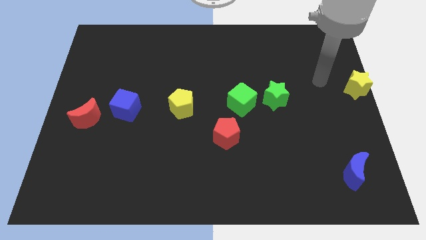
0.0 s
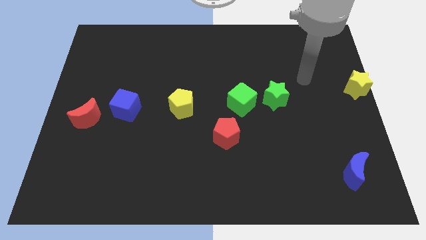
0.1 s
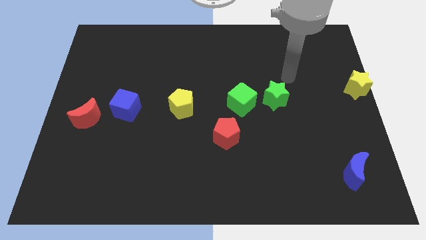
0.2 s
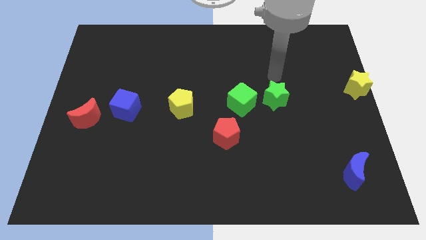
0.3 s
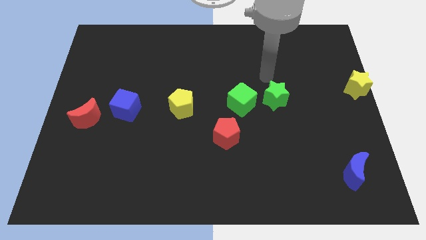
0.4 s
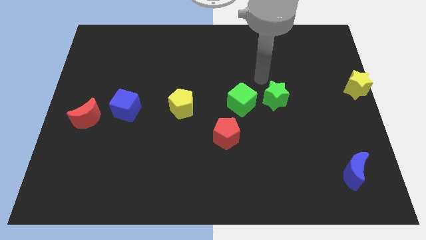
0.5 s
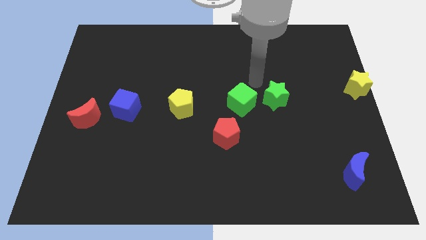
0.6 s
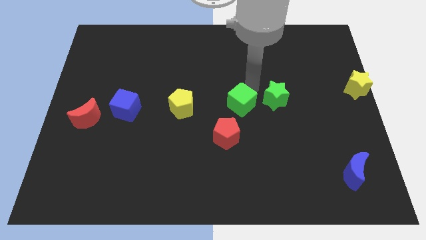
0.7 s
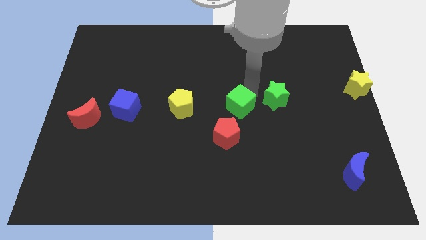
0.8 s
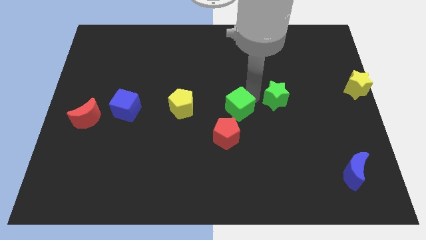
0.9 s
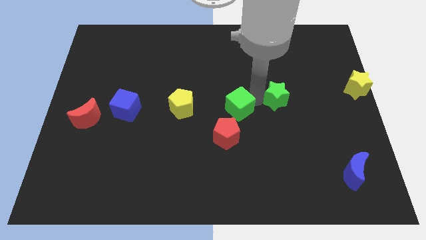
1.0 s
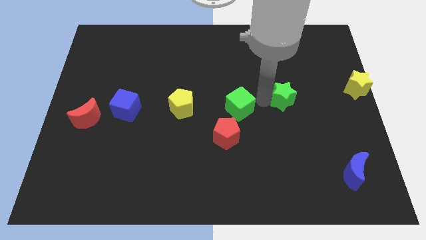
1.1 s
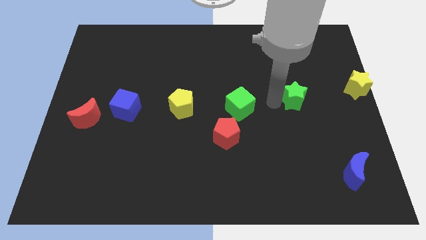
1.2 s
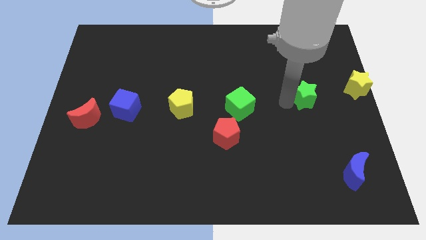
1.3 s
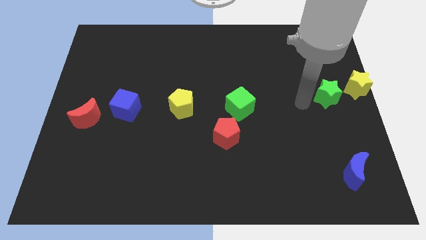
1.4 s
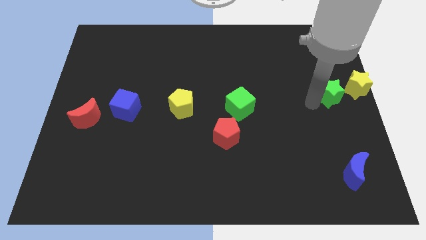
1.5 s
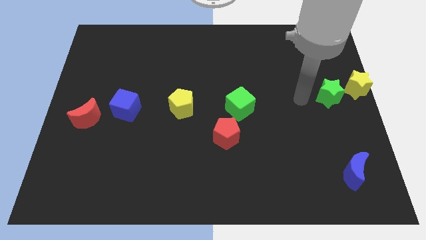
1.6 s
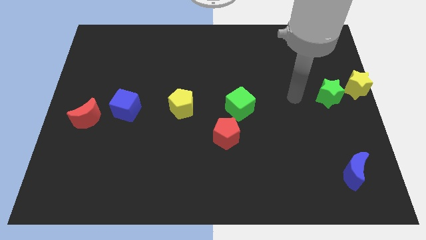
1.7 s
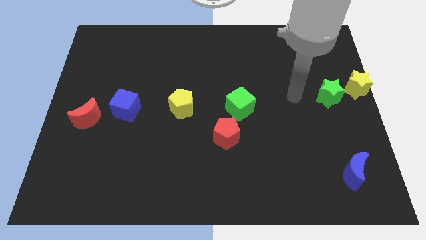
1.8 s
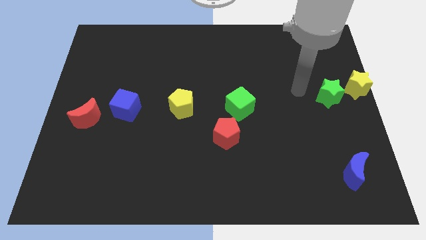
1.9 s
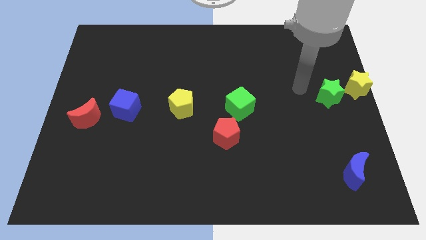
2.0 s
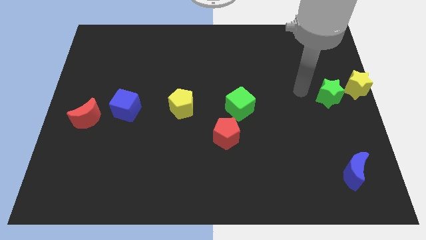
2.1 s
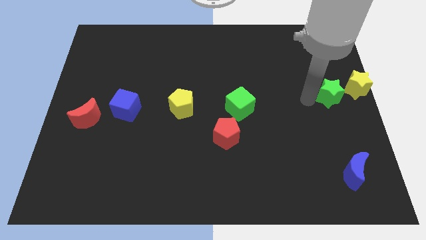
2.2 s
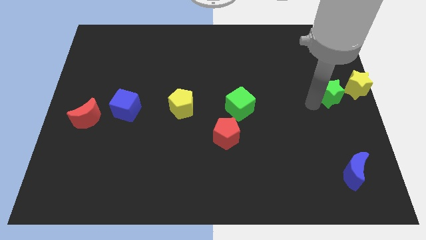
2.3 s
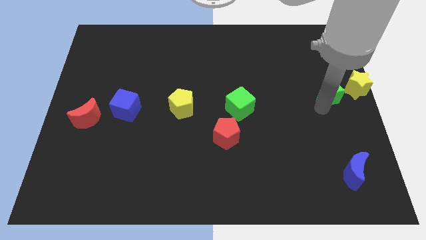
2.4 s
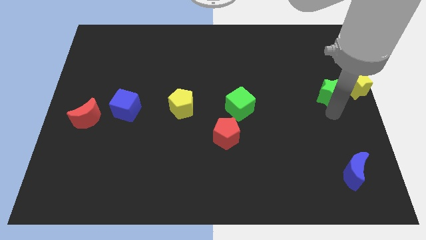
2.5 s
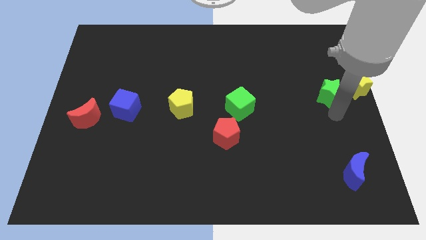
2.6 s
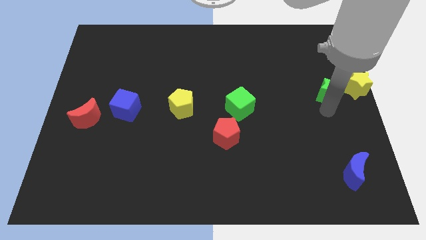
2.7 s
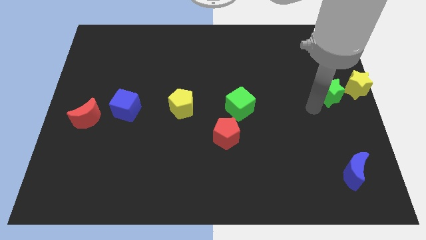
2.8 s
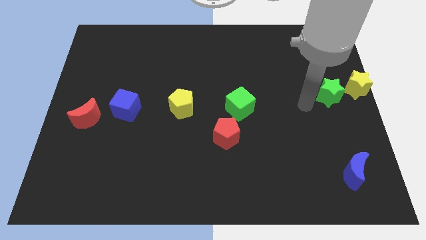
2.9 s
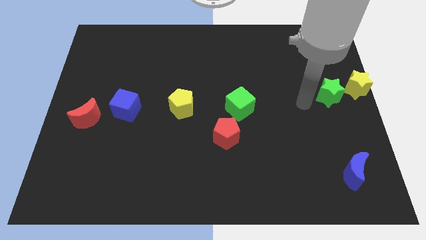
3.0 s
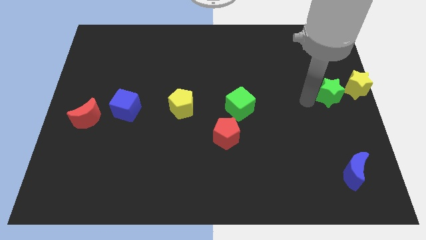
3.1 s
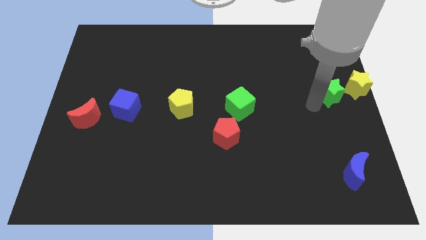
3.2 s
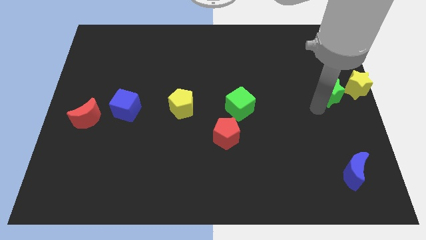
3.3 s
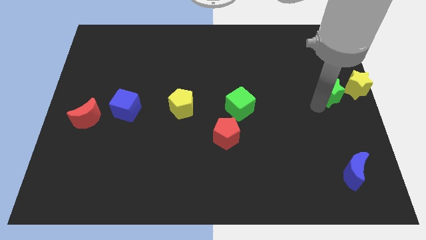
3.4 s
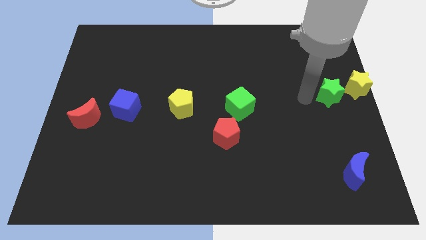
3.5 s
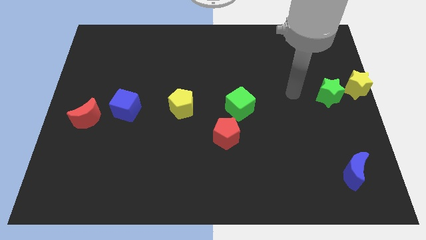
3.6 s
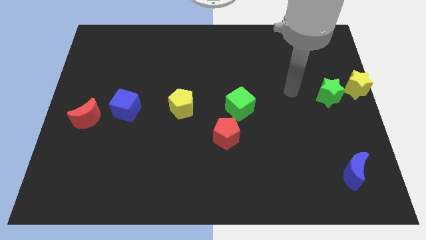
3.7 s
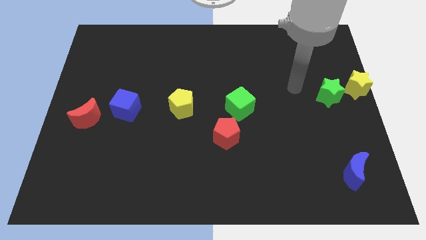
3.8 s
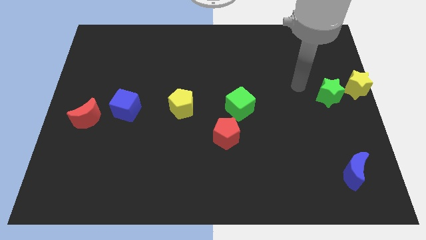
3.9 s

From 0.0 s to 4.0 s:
push the green star to the left of yellow star

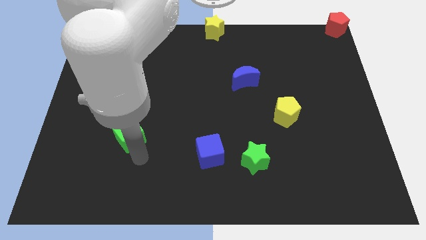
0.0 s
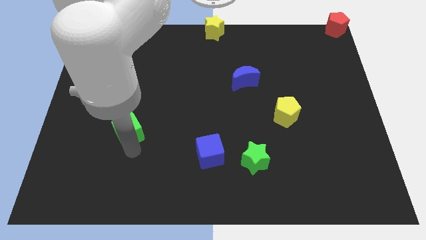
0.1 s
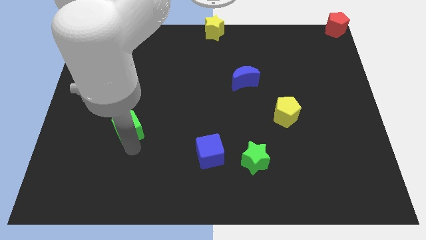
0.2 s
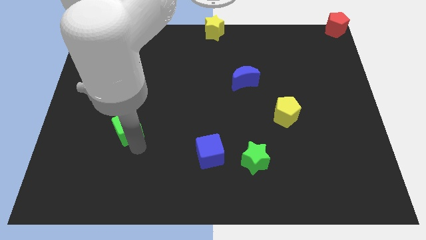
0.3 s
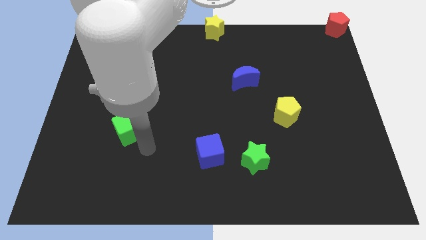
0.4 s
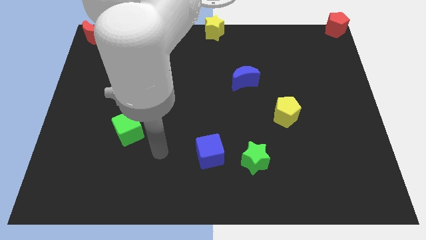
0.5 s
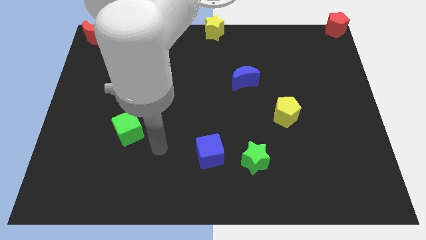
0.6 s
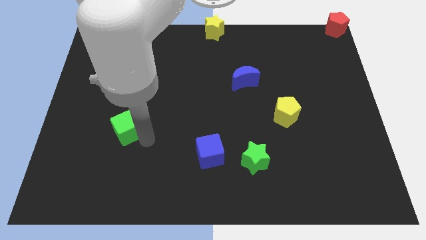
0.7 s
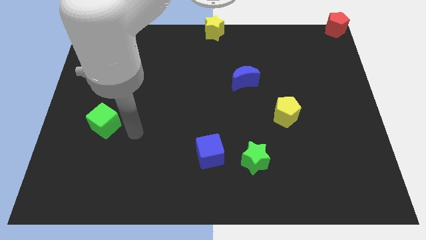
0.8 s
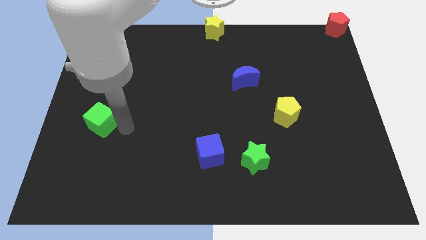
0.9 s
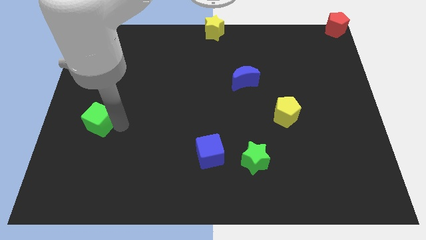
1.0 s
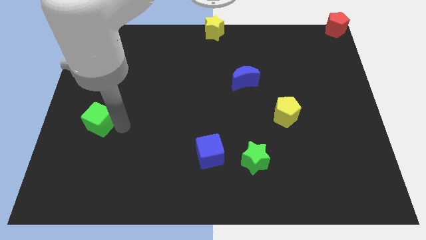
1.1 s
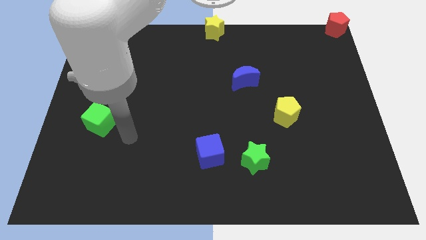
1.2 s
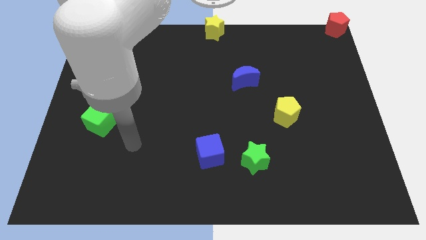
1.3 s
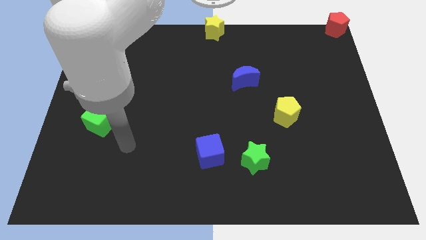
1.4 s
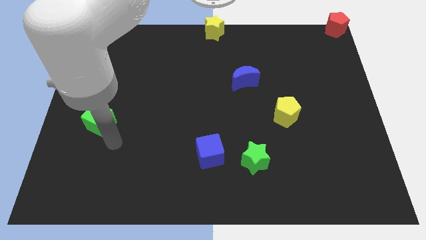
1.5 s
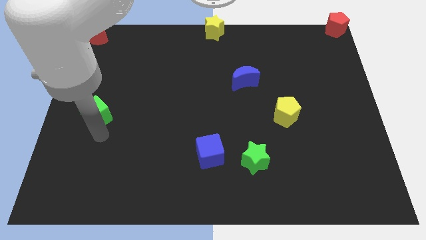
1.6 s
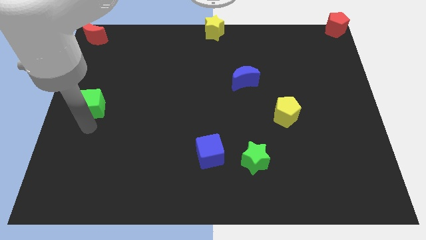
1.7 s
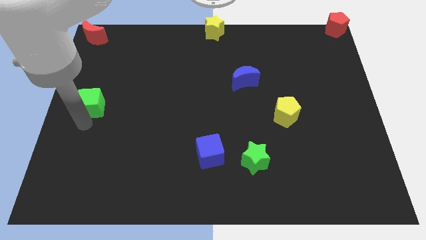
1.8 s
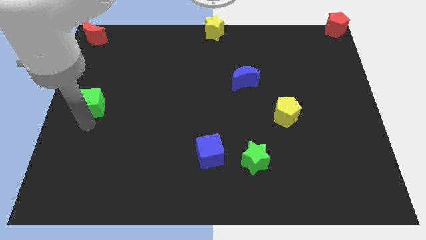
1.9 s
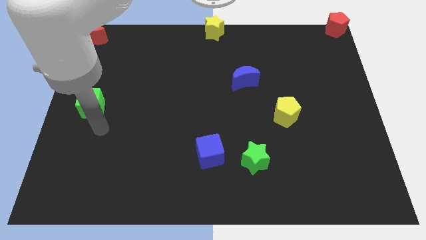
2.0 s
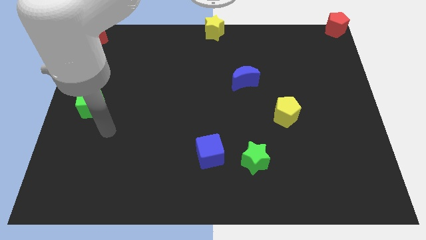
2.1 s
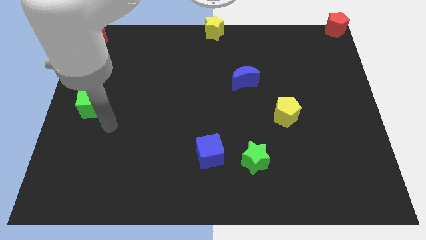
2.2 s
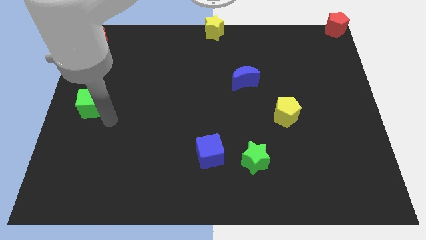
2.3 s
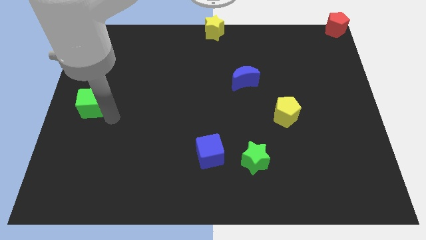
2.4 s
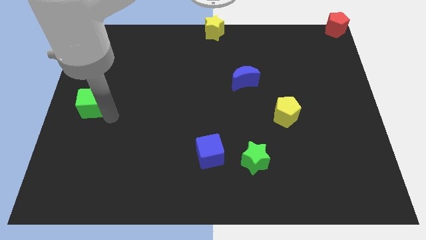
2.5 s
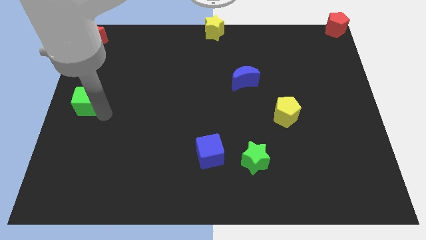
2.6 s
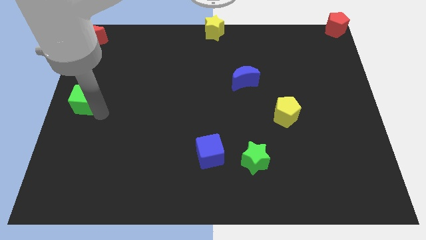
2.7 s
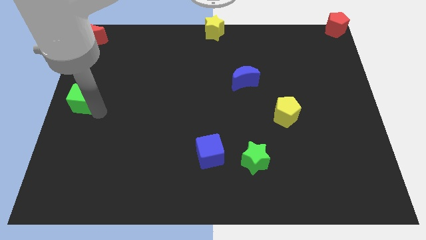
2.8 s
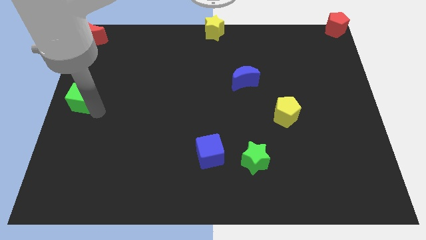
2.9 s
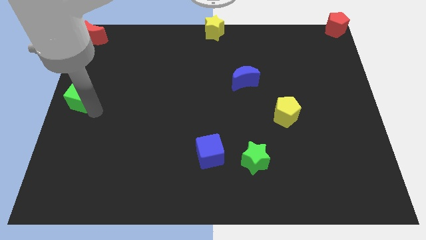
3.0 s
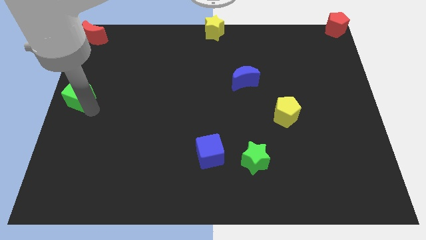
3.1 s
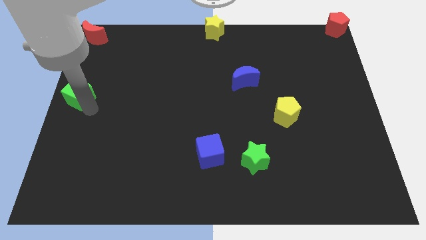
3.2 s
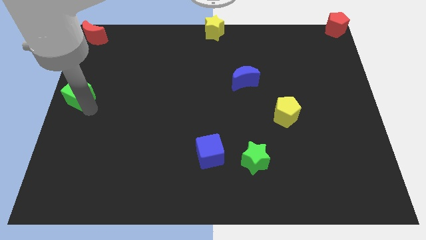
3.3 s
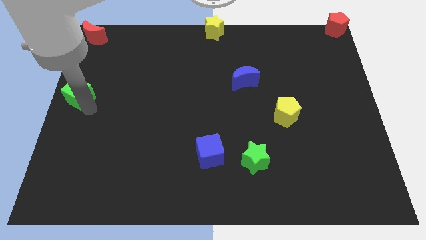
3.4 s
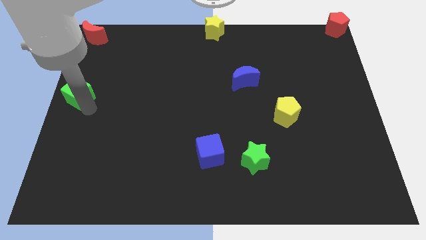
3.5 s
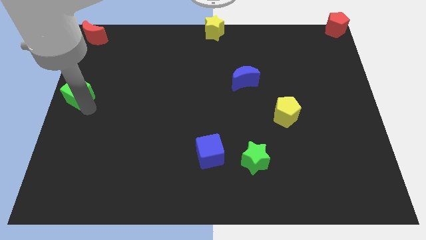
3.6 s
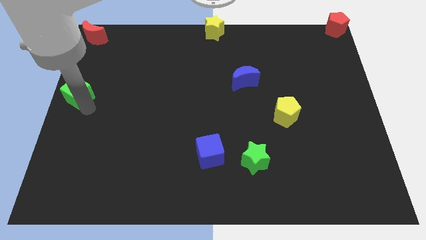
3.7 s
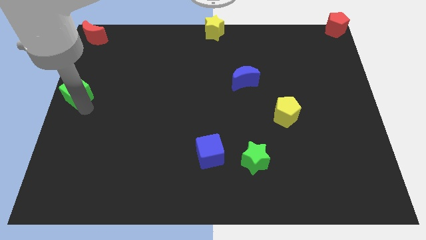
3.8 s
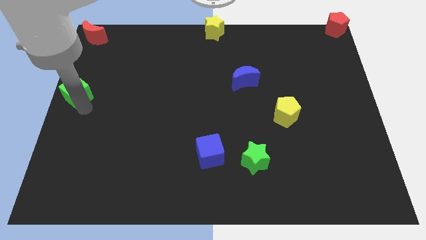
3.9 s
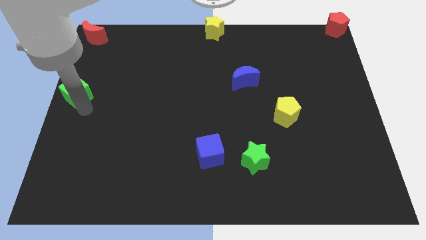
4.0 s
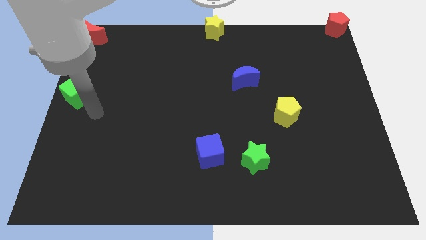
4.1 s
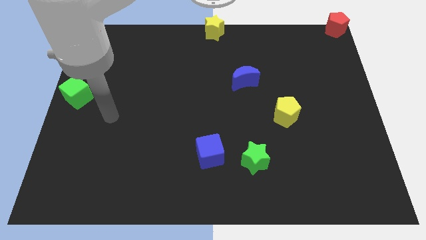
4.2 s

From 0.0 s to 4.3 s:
move the green cube to the left center

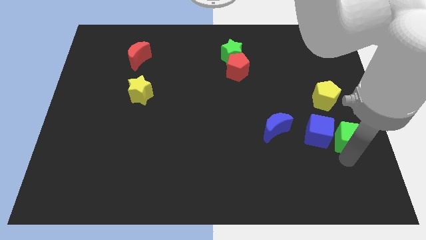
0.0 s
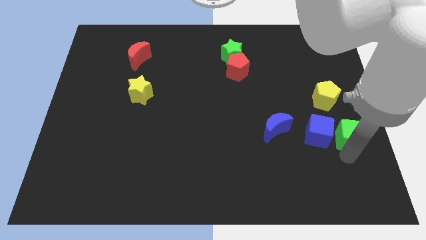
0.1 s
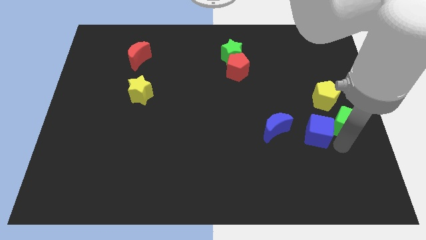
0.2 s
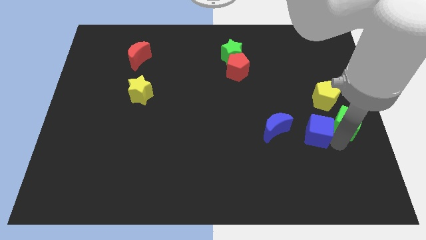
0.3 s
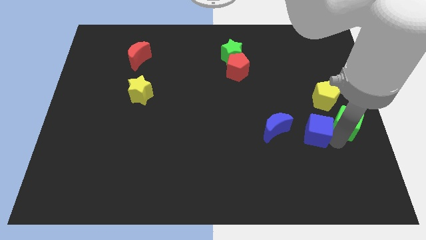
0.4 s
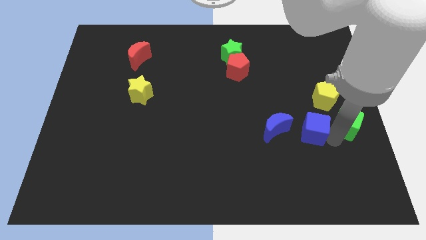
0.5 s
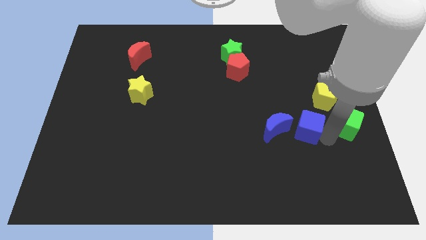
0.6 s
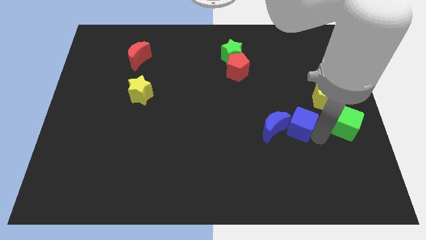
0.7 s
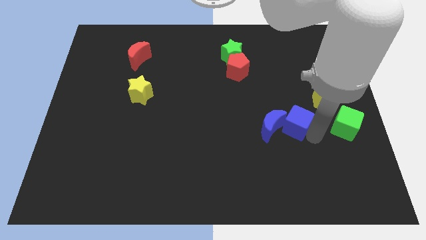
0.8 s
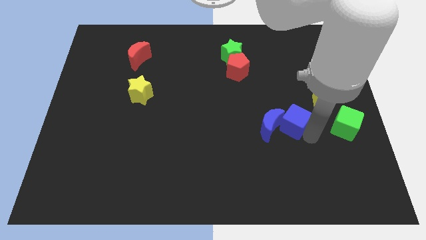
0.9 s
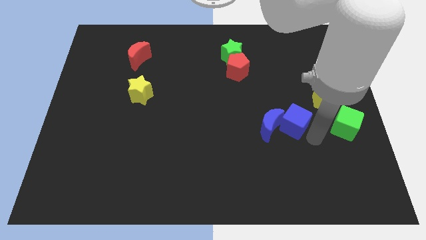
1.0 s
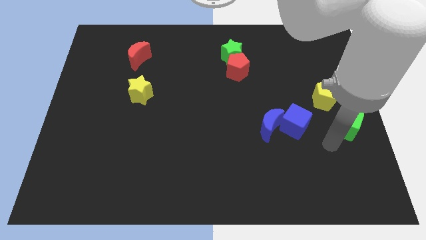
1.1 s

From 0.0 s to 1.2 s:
push the blue cube into the right side of the blue crescent
